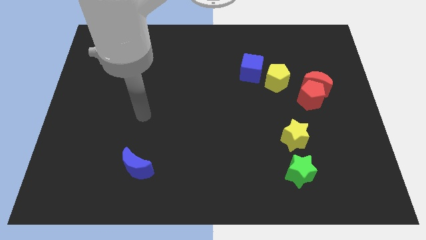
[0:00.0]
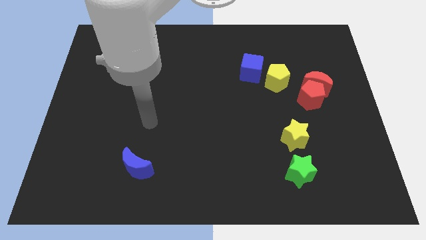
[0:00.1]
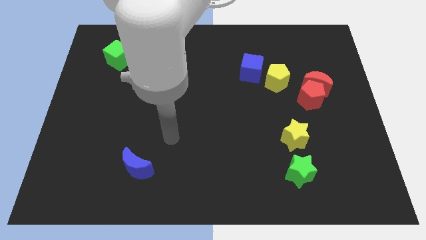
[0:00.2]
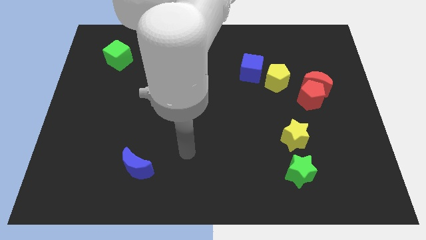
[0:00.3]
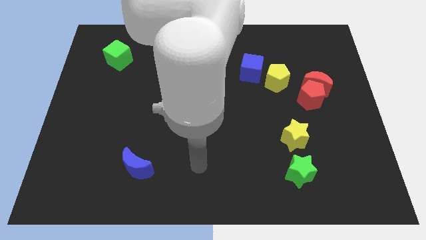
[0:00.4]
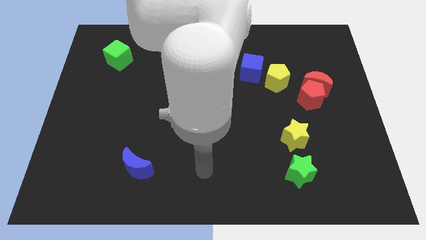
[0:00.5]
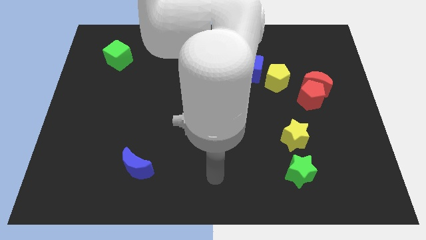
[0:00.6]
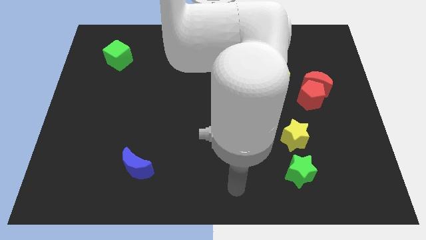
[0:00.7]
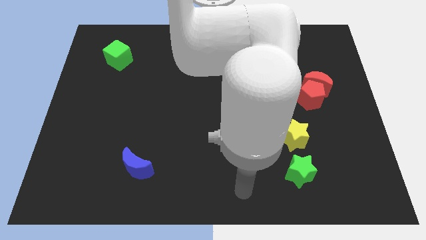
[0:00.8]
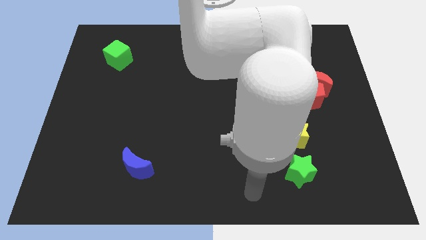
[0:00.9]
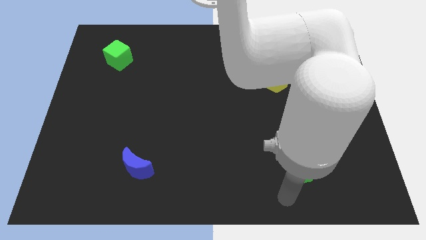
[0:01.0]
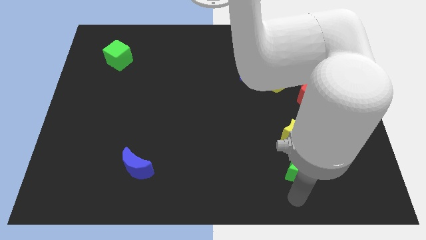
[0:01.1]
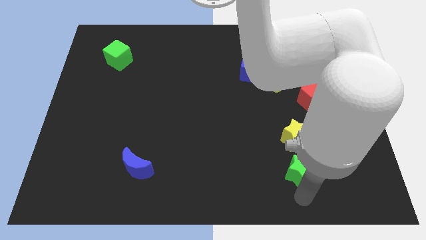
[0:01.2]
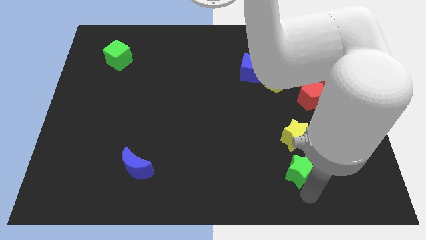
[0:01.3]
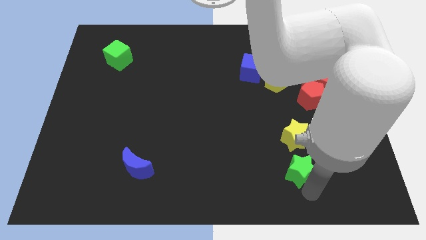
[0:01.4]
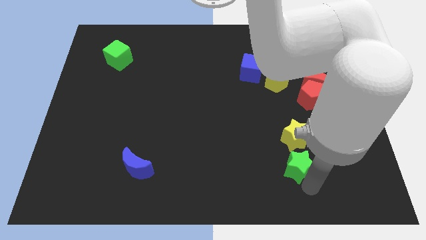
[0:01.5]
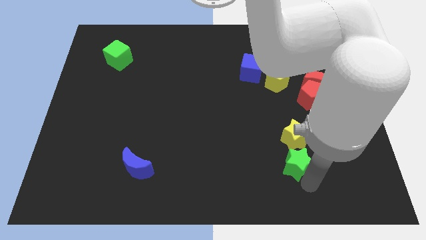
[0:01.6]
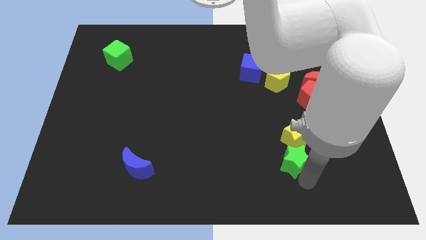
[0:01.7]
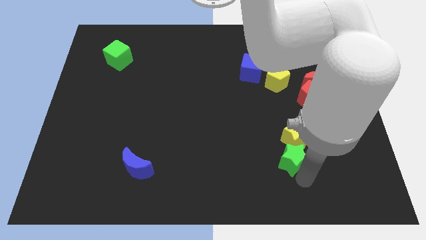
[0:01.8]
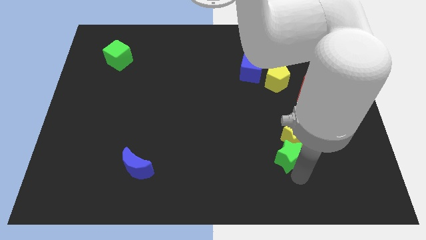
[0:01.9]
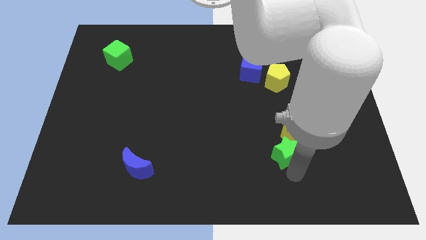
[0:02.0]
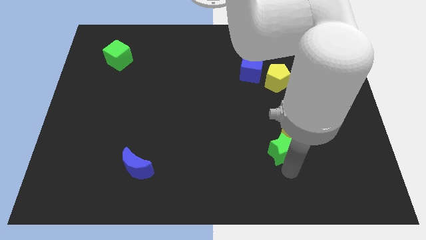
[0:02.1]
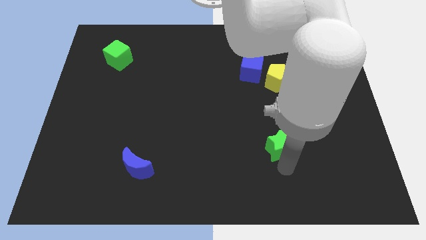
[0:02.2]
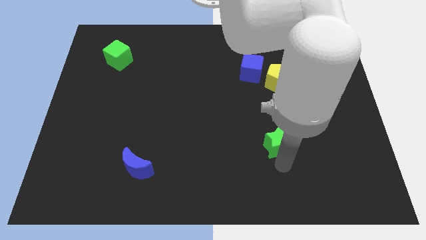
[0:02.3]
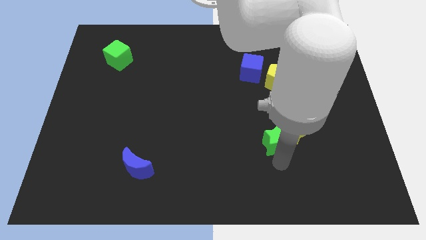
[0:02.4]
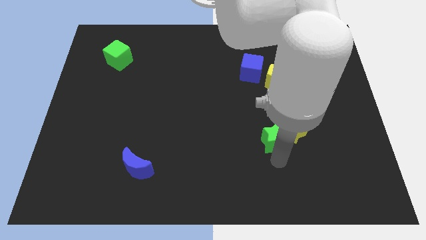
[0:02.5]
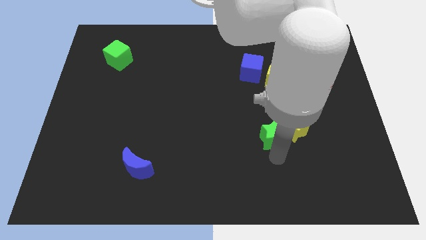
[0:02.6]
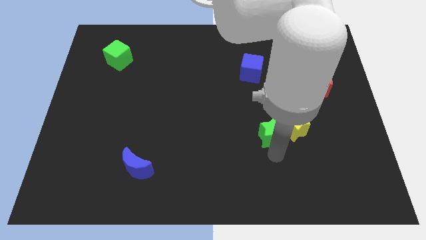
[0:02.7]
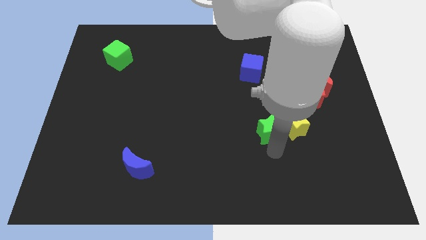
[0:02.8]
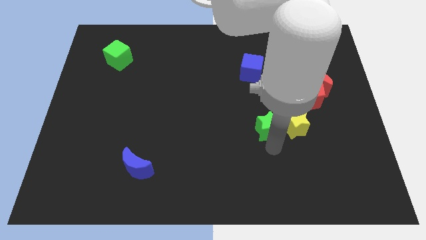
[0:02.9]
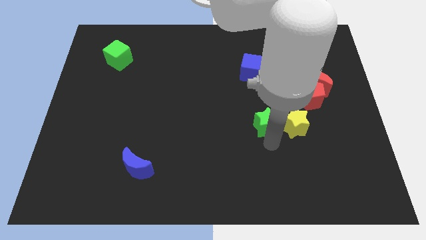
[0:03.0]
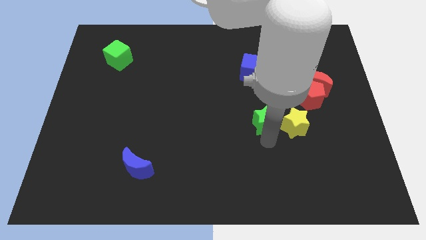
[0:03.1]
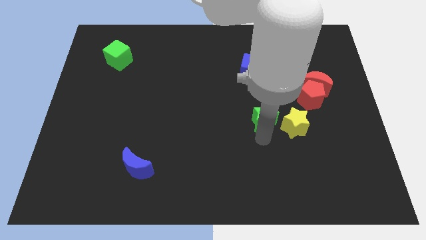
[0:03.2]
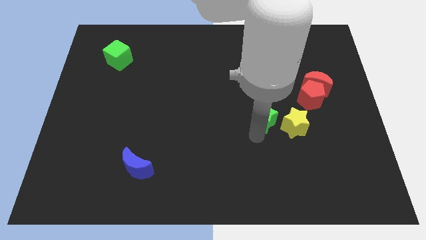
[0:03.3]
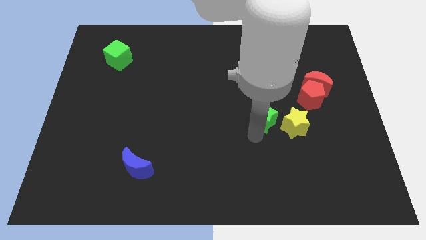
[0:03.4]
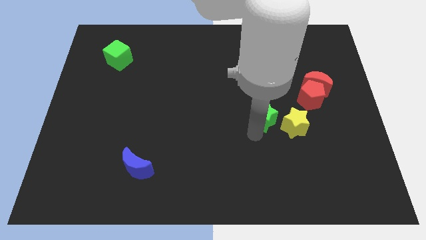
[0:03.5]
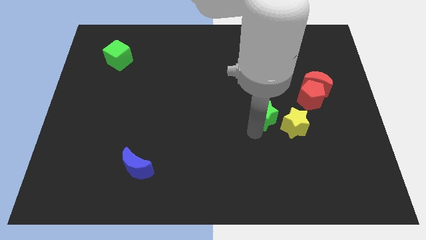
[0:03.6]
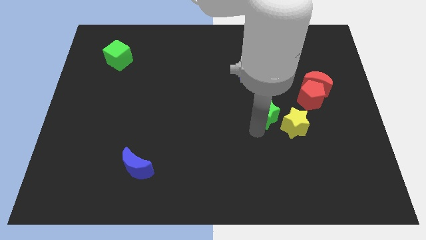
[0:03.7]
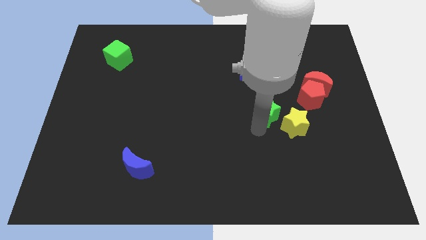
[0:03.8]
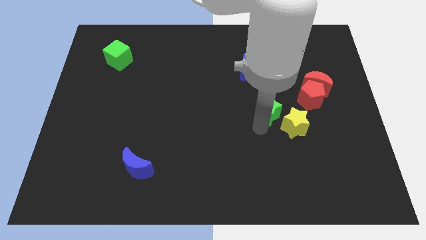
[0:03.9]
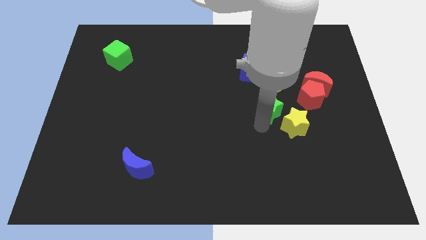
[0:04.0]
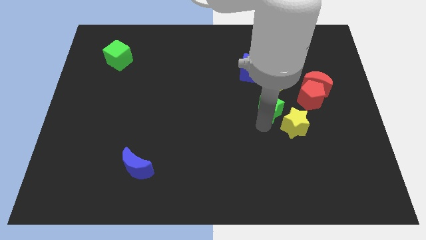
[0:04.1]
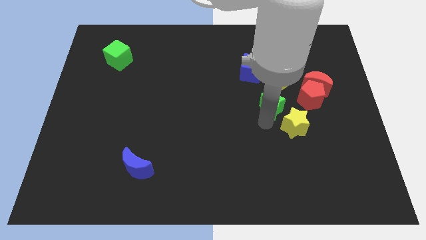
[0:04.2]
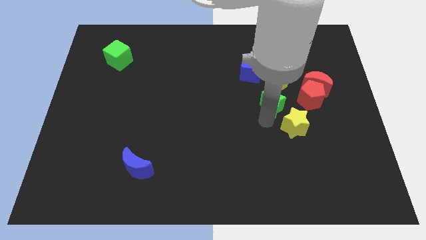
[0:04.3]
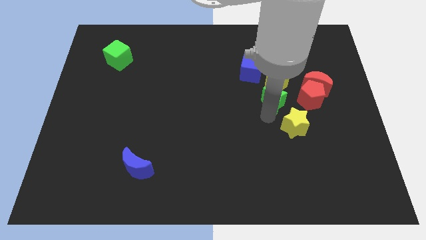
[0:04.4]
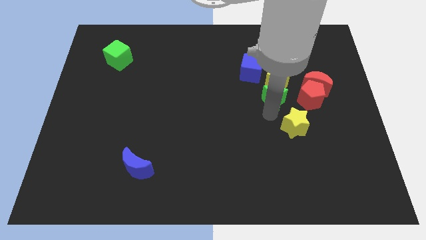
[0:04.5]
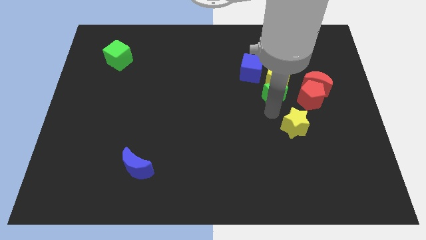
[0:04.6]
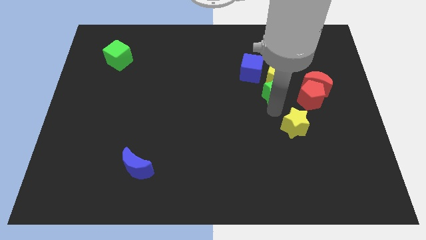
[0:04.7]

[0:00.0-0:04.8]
slide the green star next to the yellow pentagon

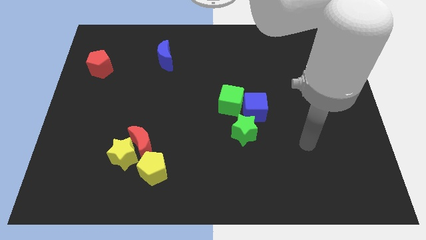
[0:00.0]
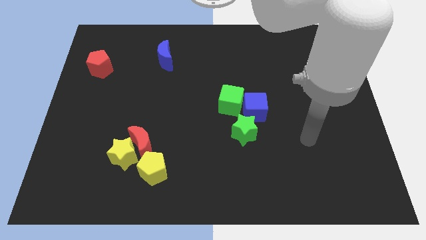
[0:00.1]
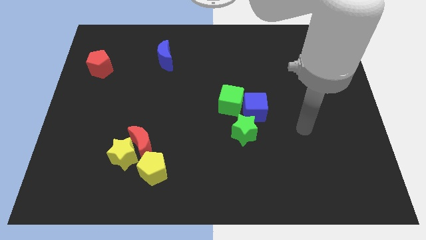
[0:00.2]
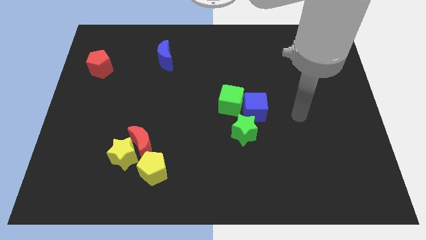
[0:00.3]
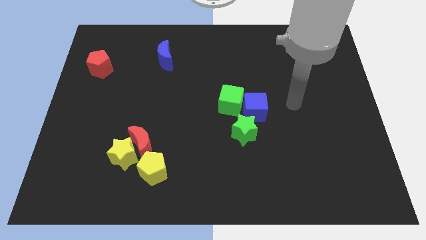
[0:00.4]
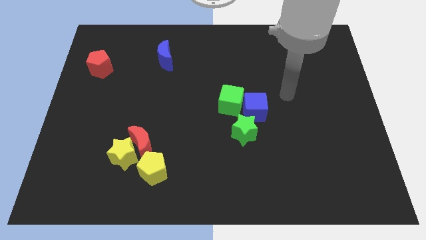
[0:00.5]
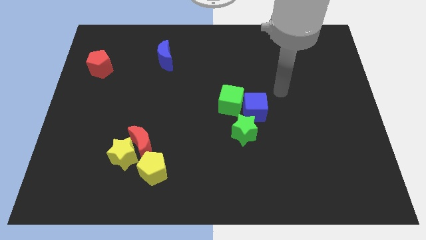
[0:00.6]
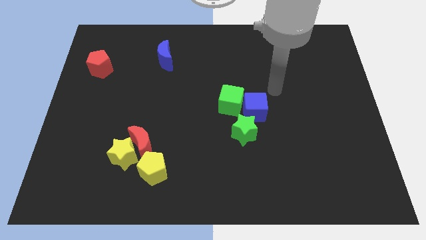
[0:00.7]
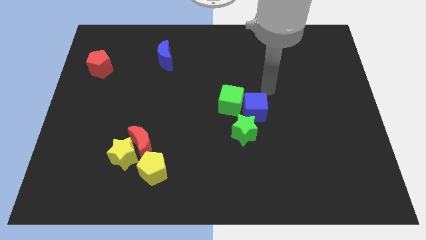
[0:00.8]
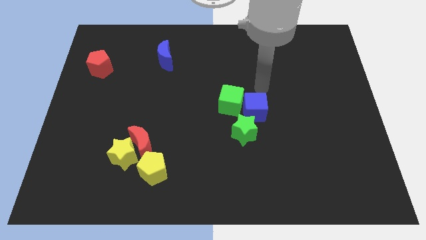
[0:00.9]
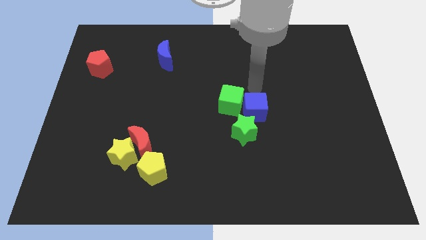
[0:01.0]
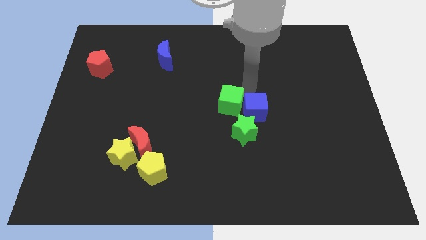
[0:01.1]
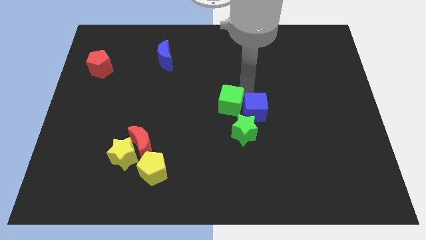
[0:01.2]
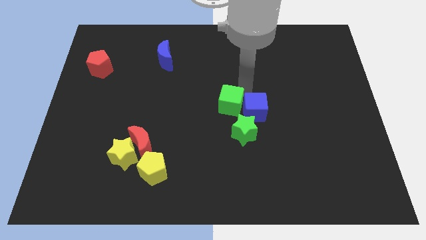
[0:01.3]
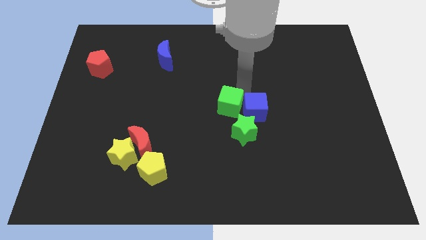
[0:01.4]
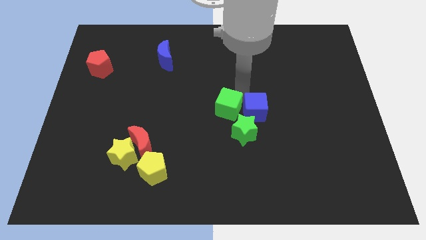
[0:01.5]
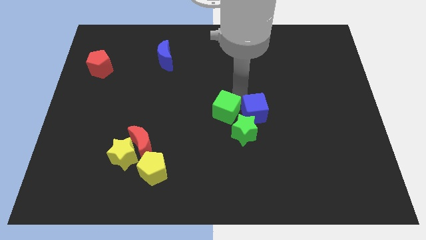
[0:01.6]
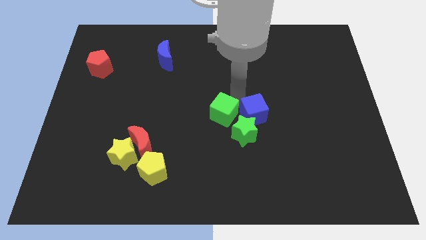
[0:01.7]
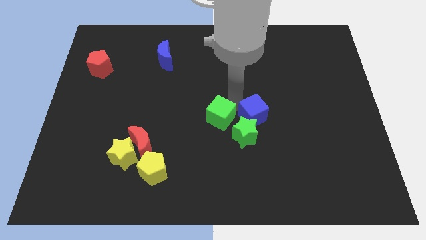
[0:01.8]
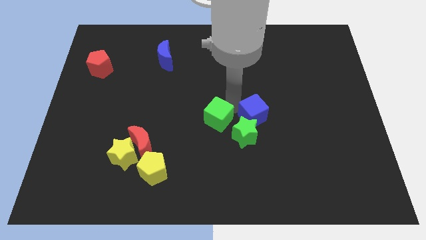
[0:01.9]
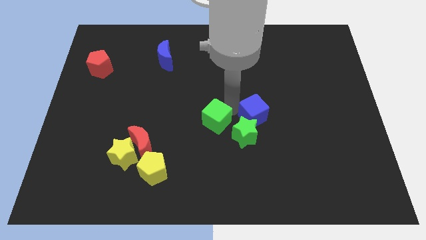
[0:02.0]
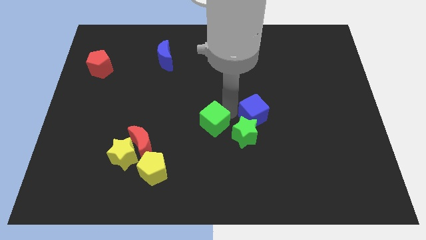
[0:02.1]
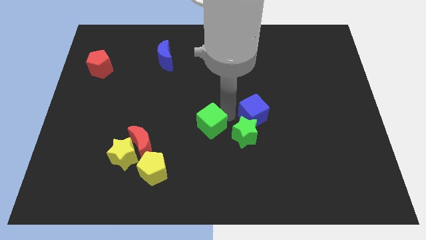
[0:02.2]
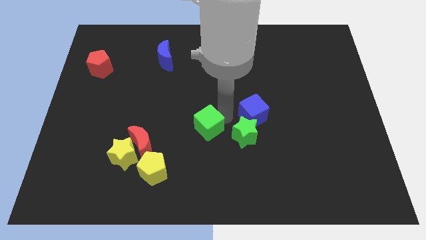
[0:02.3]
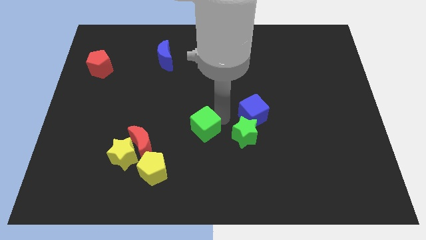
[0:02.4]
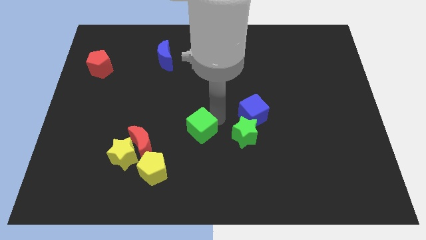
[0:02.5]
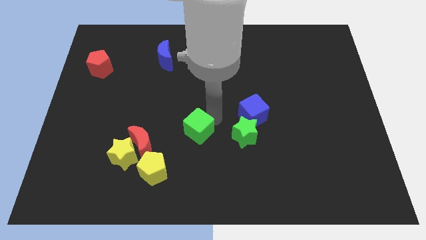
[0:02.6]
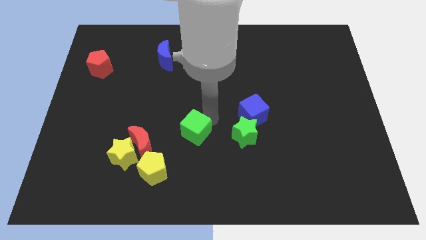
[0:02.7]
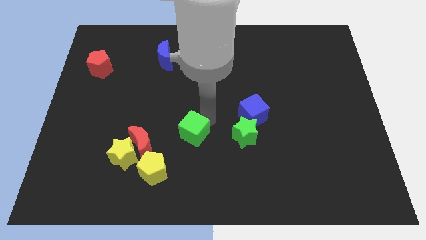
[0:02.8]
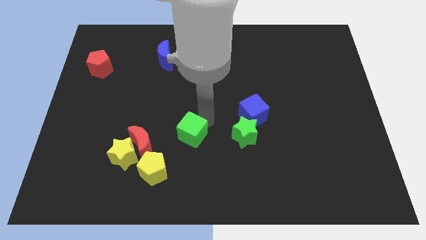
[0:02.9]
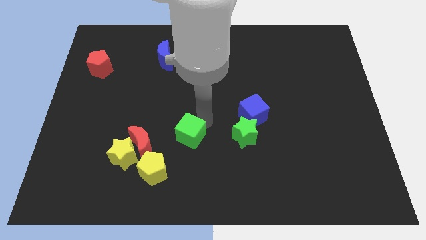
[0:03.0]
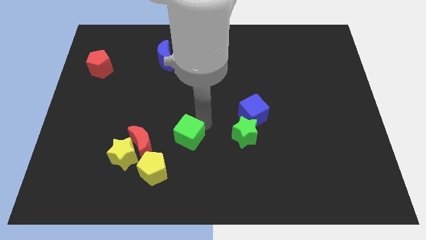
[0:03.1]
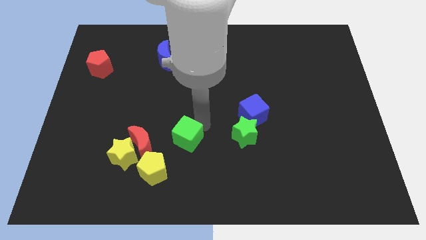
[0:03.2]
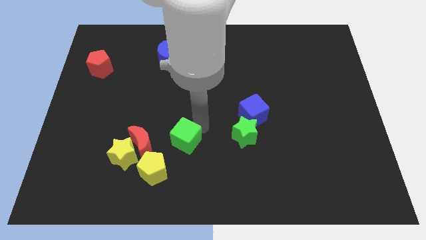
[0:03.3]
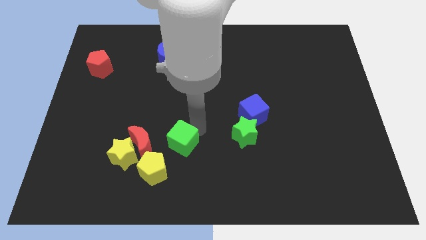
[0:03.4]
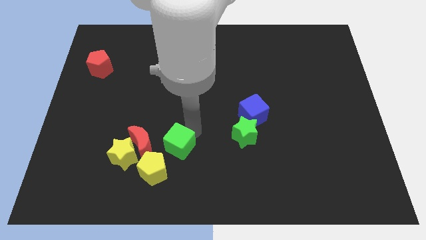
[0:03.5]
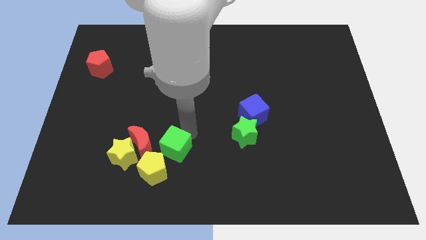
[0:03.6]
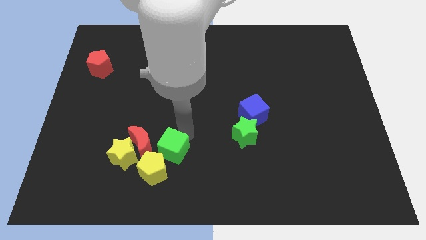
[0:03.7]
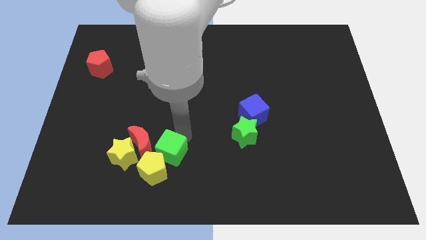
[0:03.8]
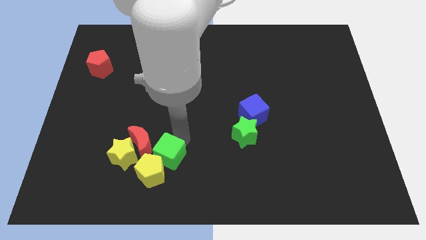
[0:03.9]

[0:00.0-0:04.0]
slide the green cube towards the yellow pentagon
